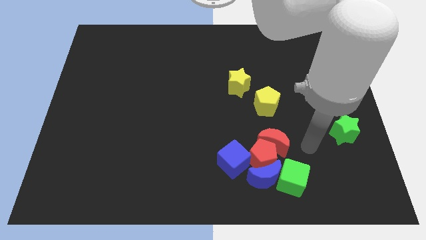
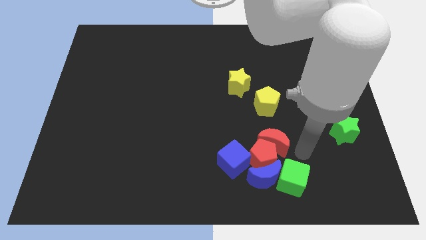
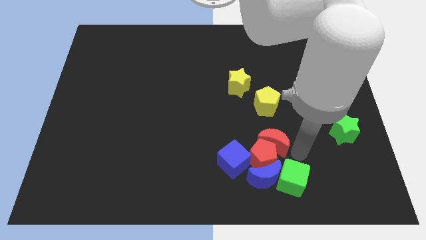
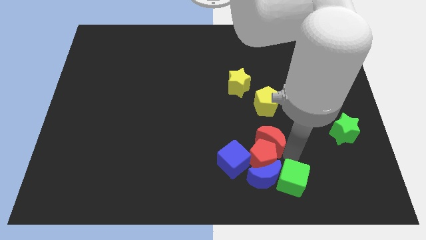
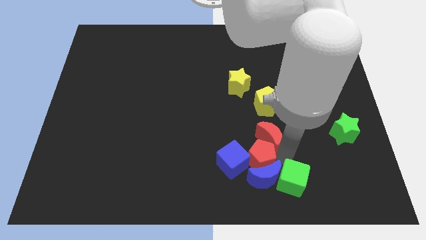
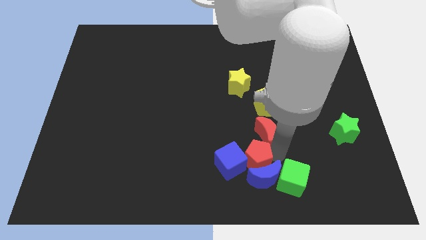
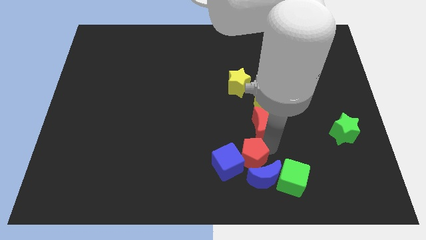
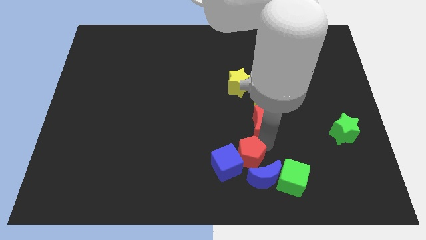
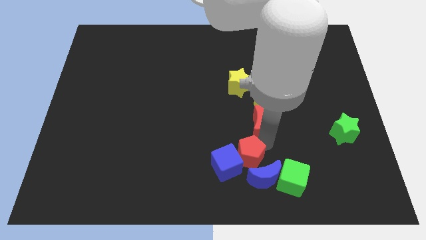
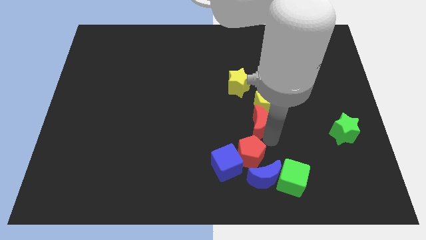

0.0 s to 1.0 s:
place the red moon below the yellow pentagon

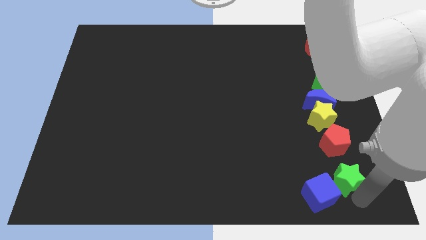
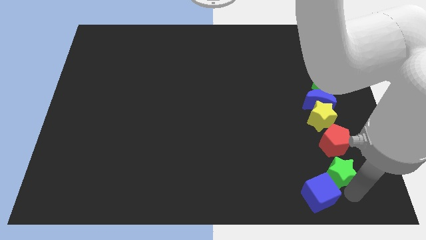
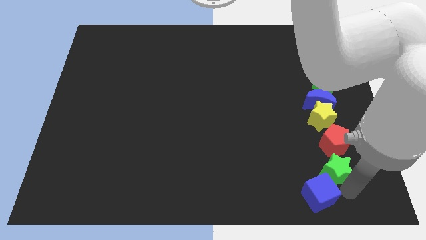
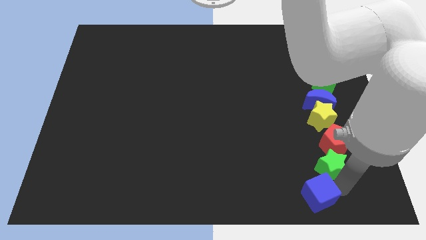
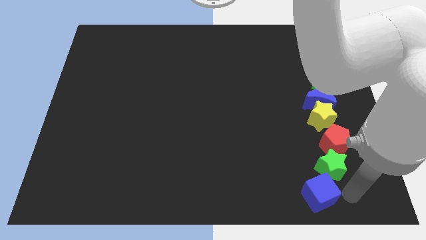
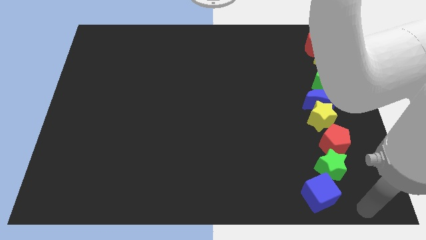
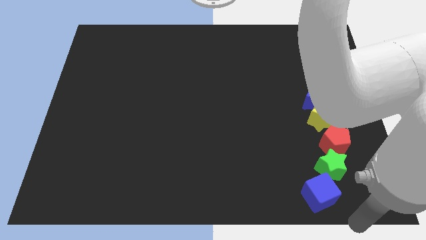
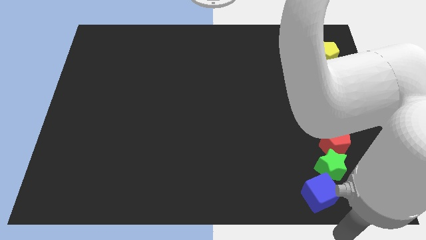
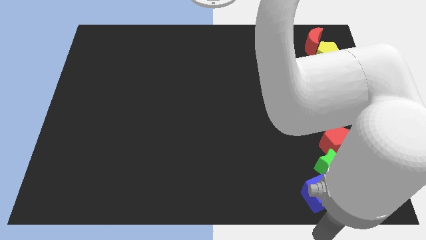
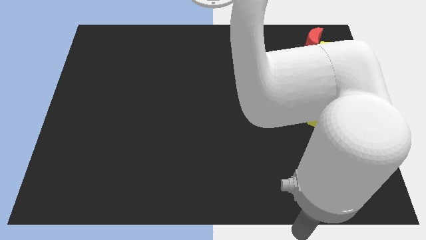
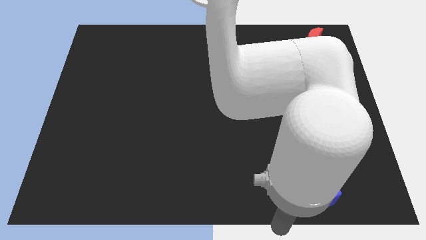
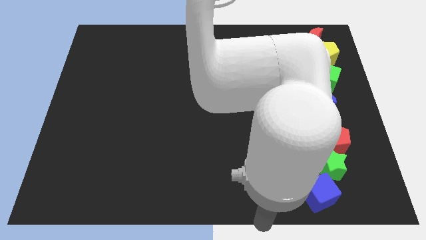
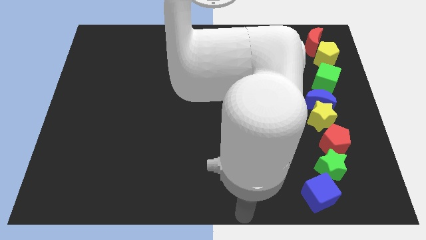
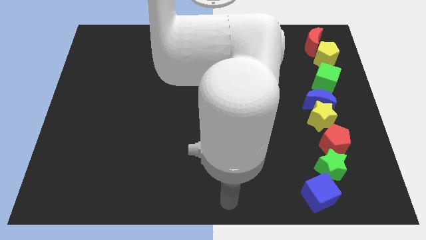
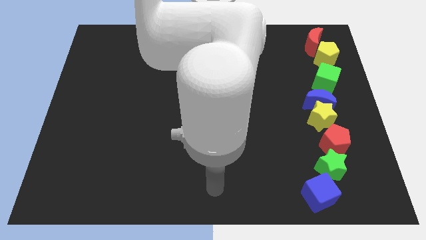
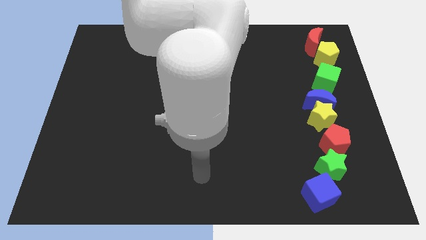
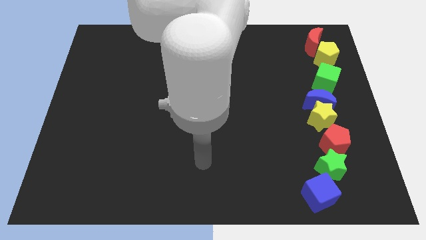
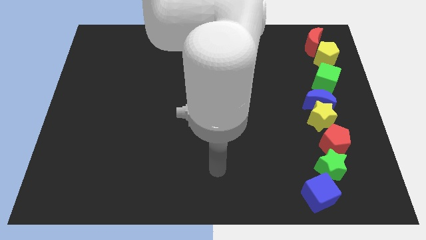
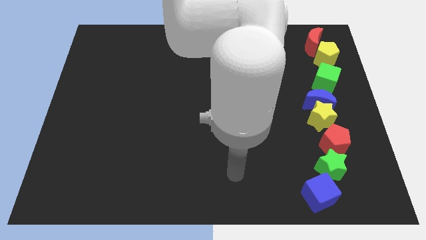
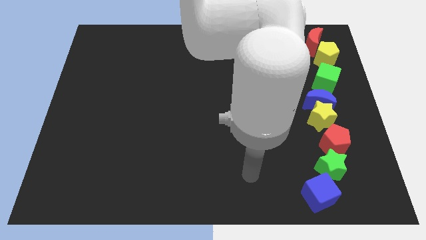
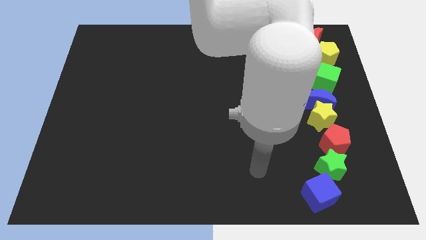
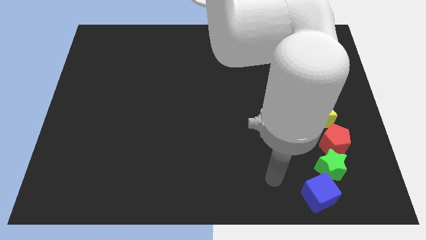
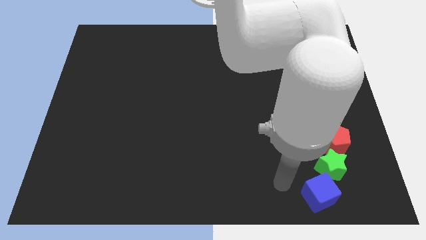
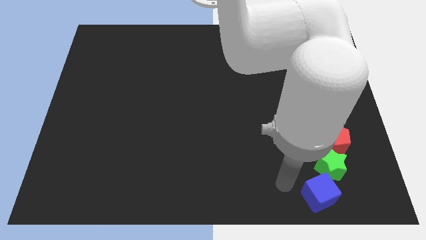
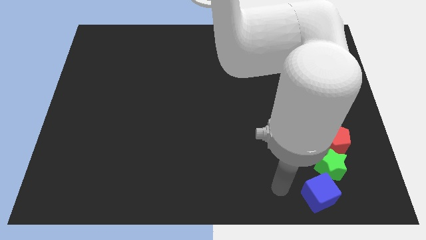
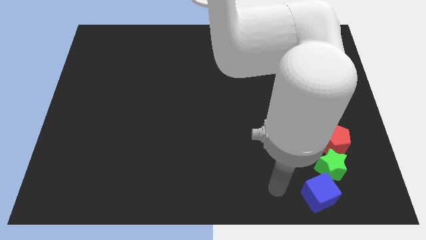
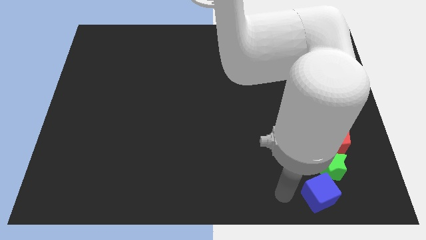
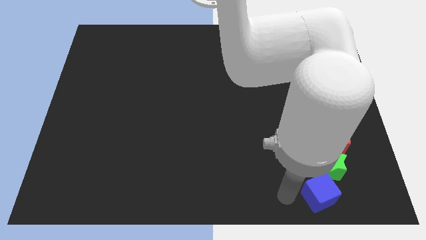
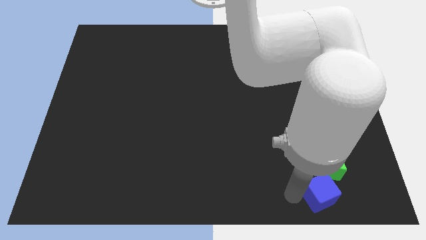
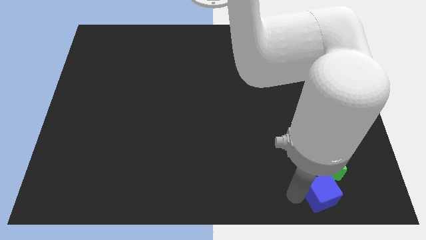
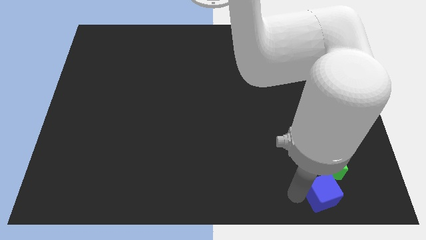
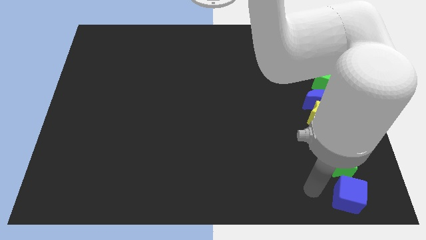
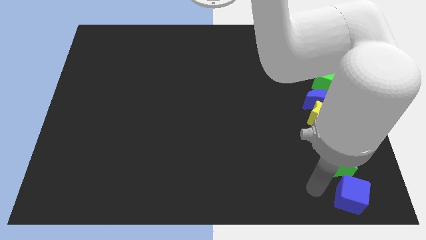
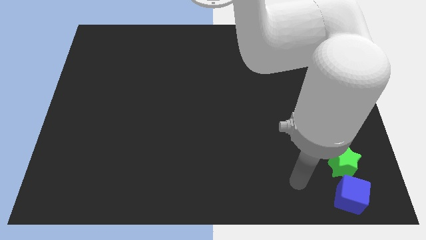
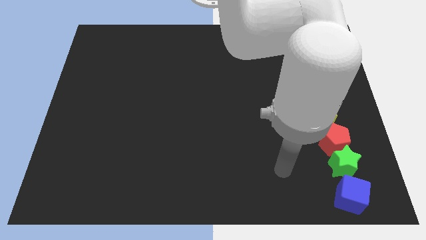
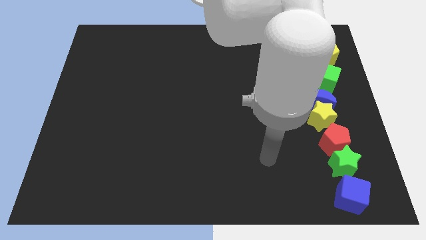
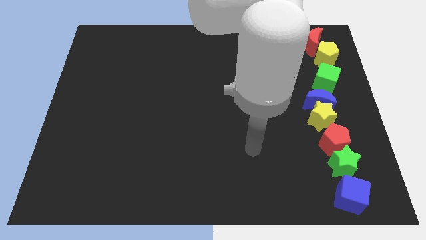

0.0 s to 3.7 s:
push the blue cube below the green star

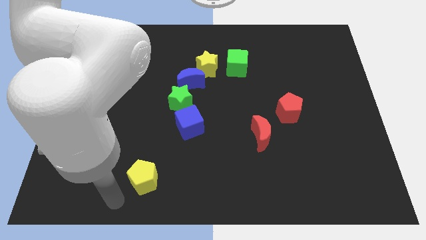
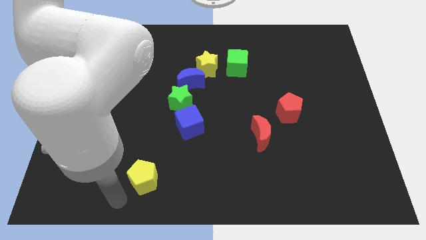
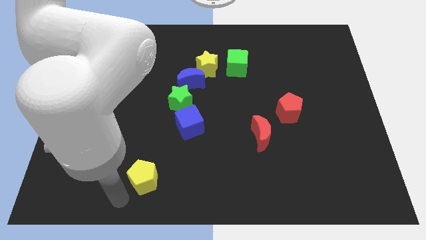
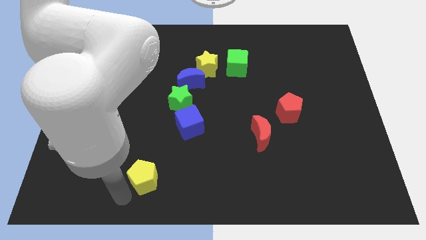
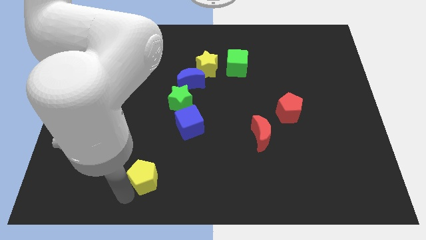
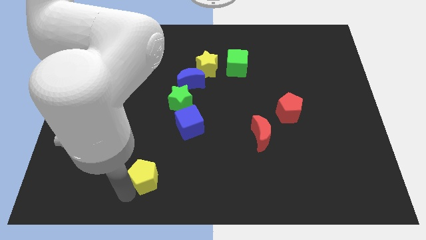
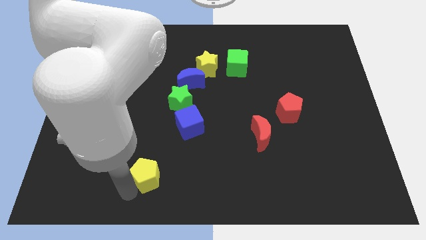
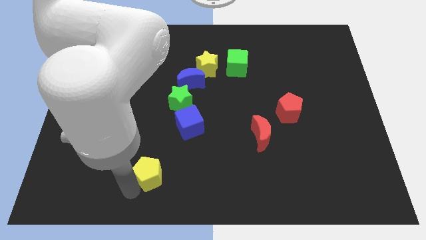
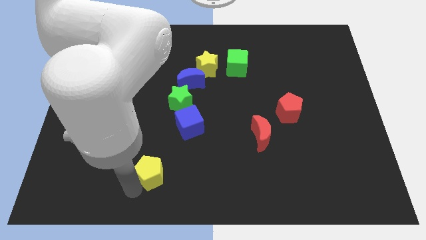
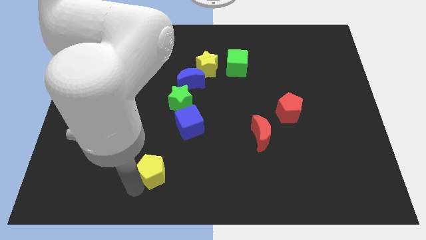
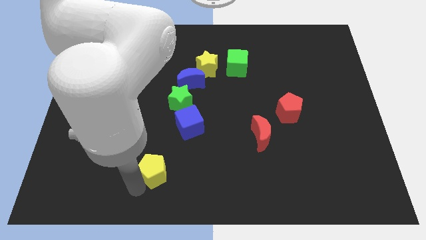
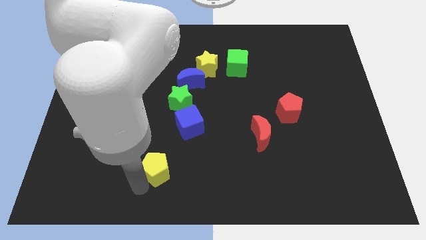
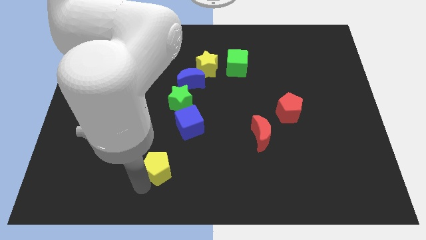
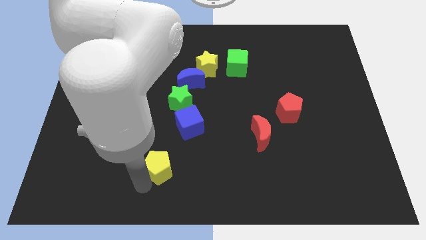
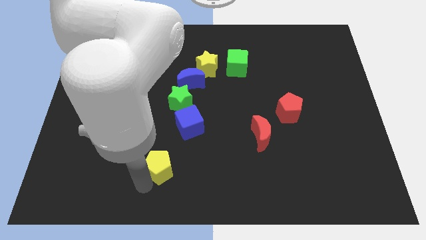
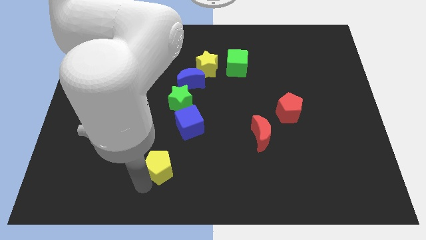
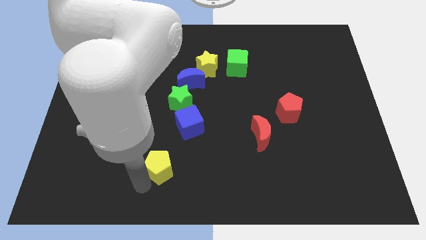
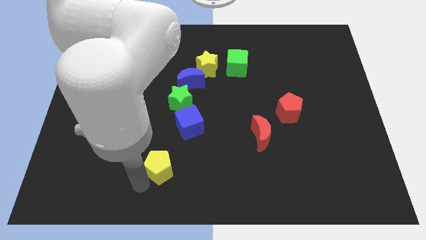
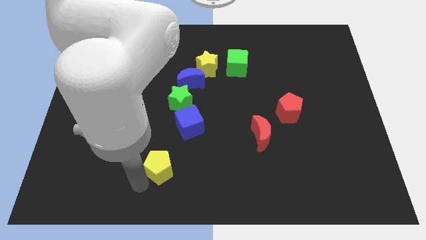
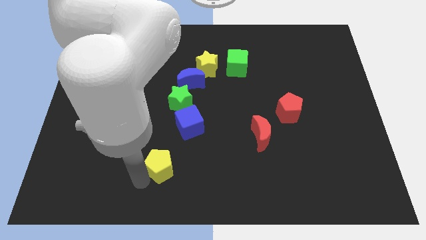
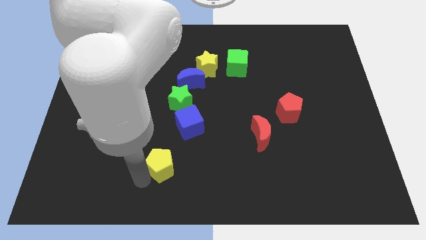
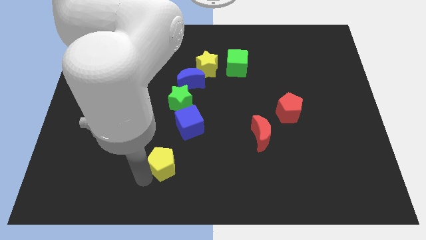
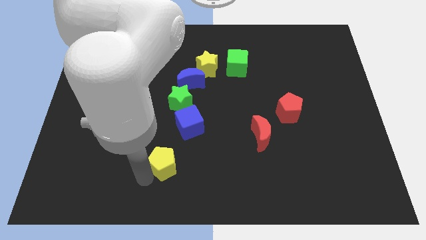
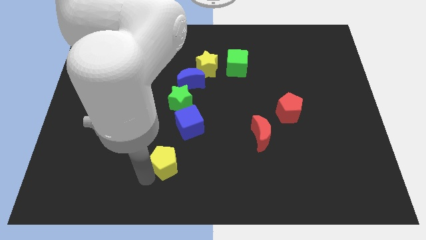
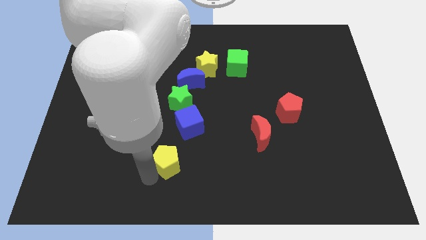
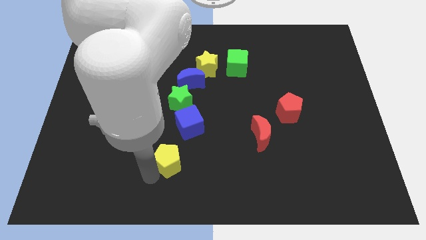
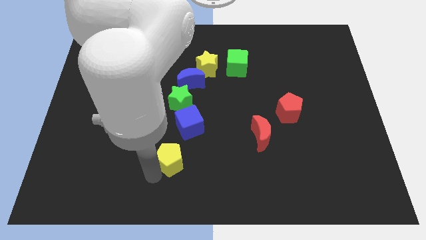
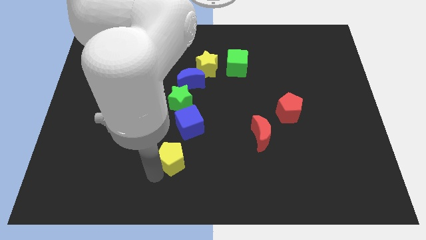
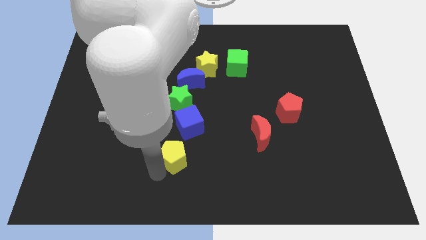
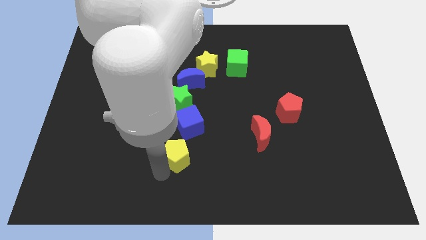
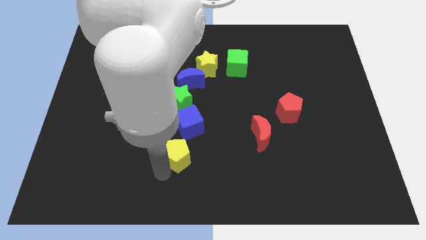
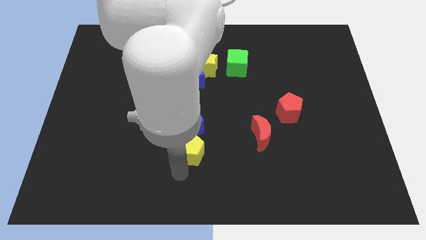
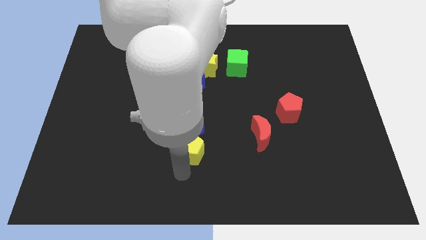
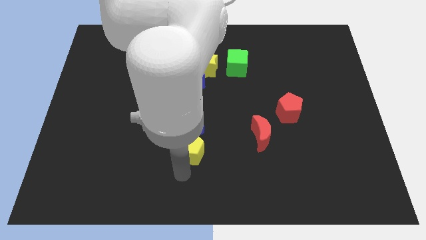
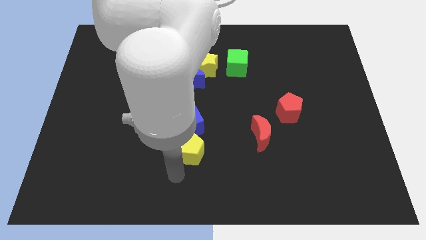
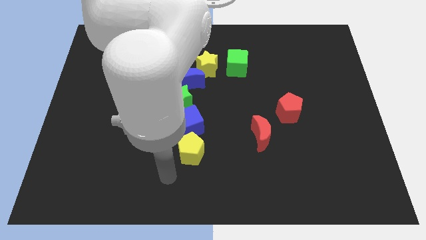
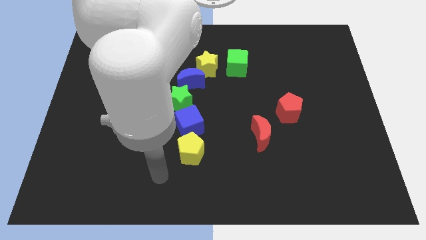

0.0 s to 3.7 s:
move the yellow pentagon to the bottom of the blue cube

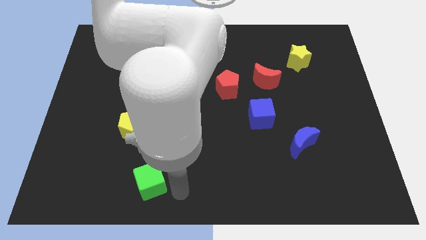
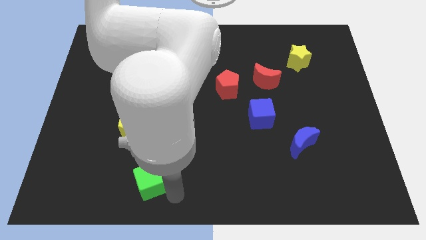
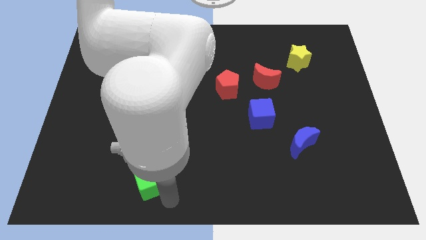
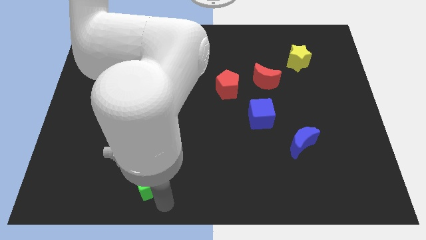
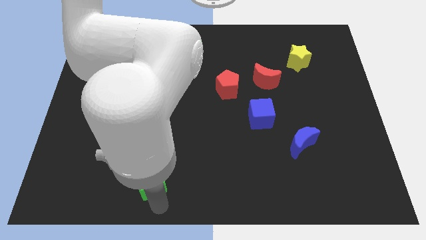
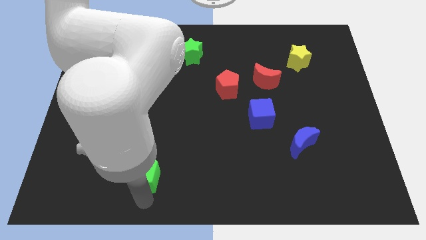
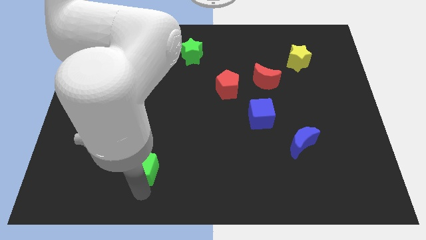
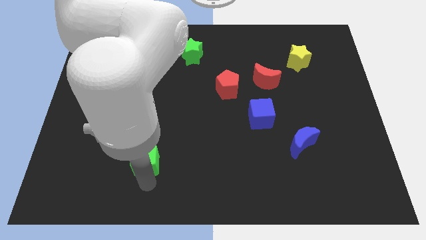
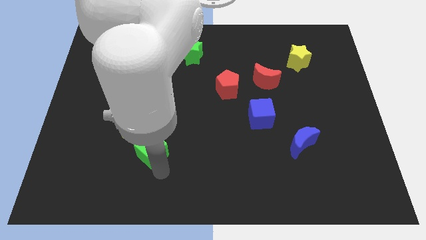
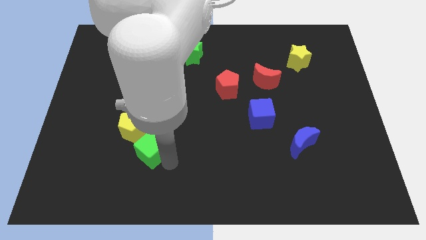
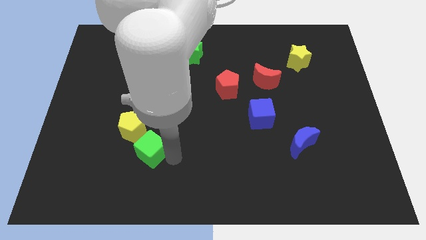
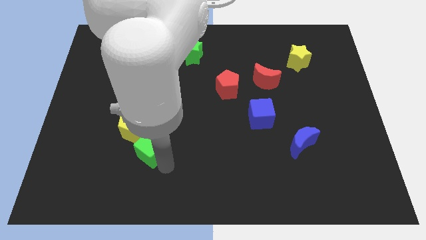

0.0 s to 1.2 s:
push the green cube towards the yellow pentagon
